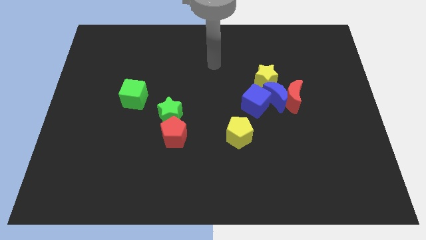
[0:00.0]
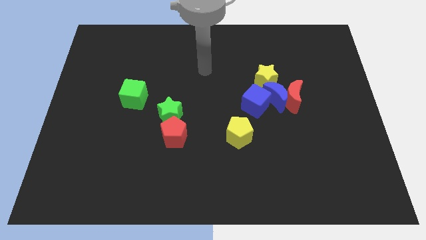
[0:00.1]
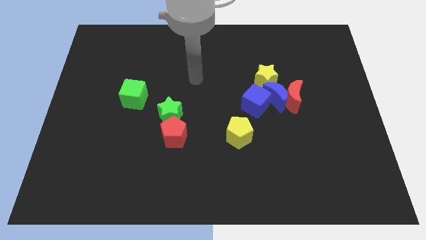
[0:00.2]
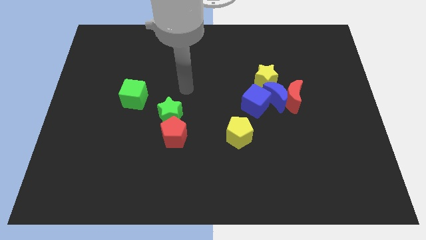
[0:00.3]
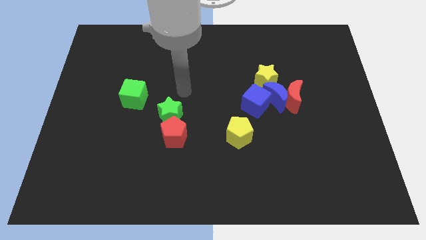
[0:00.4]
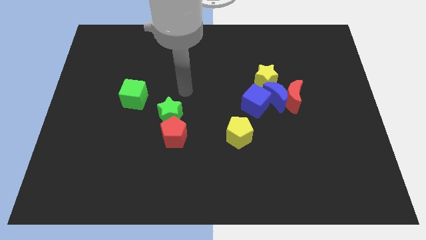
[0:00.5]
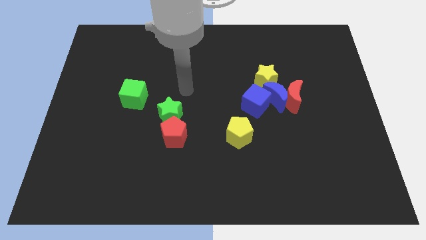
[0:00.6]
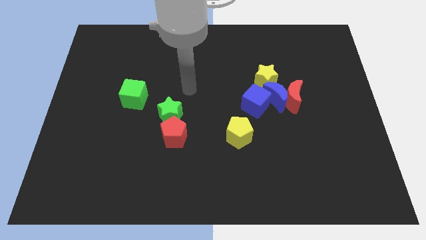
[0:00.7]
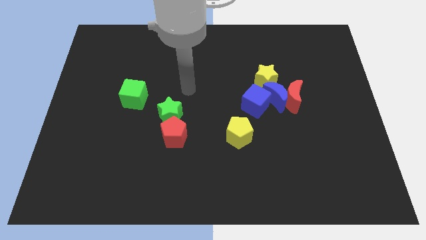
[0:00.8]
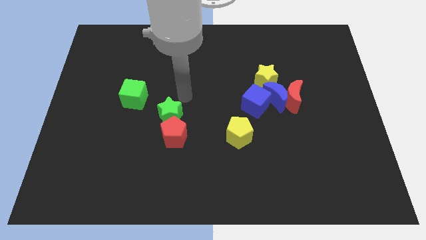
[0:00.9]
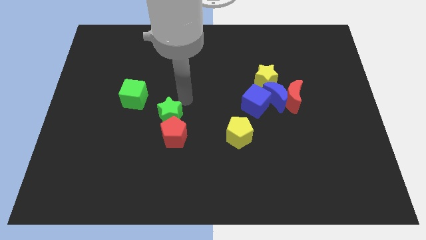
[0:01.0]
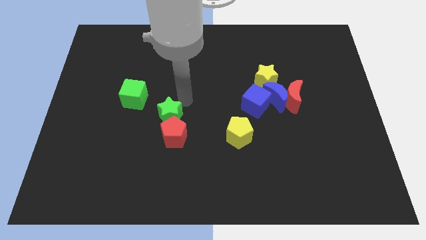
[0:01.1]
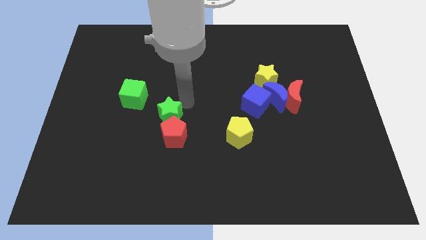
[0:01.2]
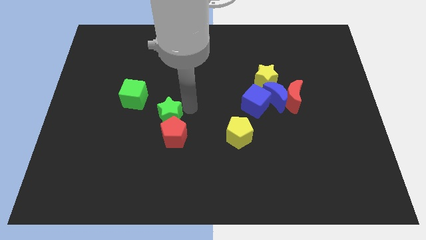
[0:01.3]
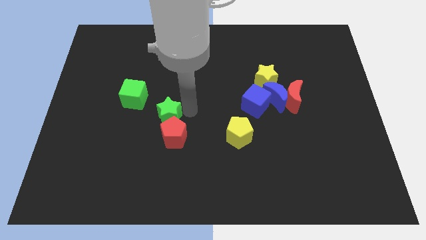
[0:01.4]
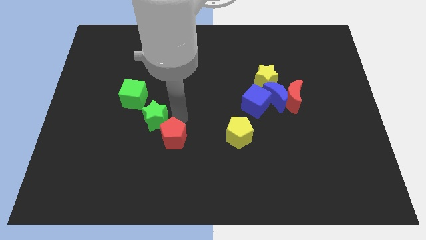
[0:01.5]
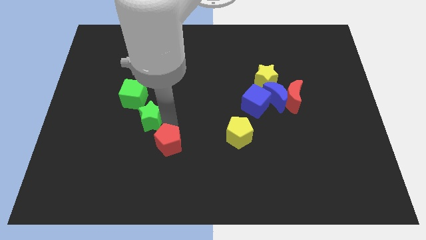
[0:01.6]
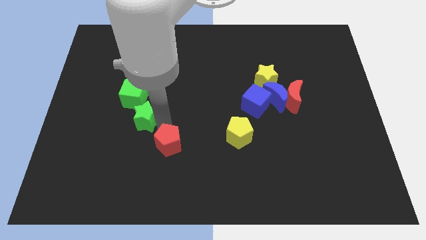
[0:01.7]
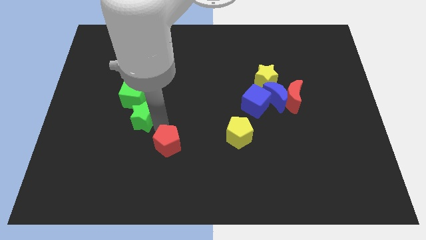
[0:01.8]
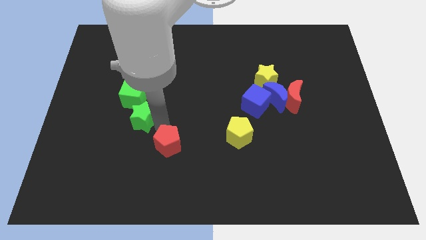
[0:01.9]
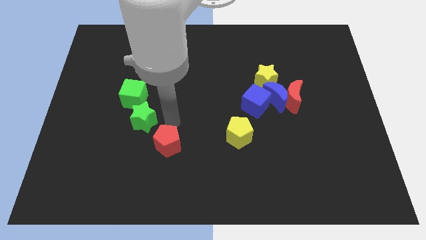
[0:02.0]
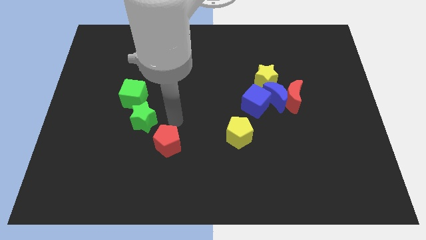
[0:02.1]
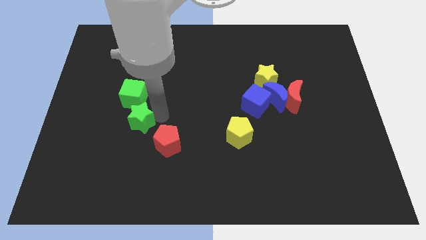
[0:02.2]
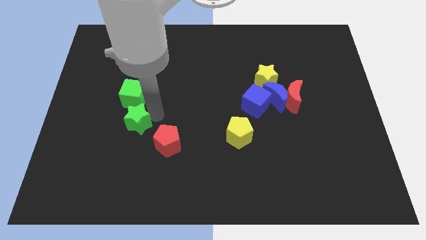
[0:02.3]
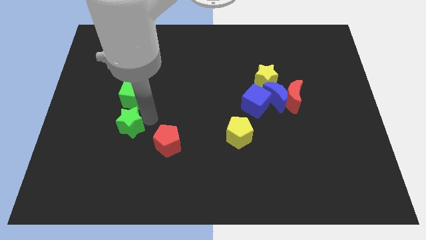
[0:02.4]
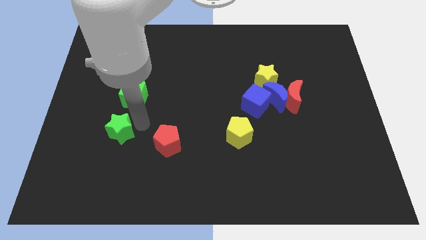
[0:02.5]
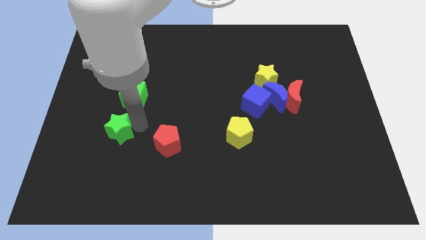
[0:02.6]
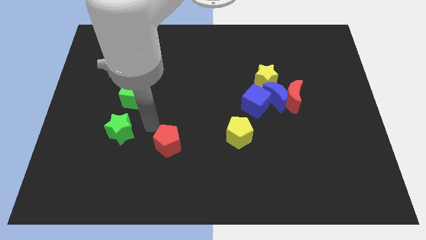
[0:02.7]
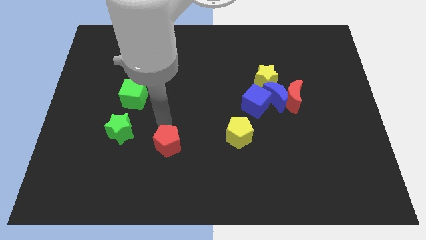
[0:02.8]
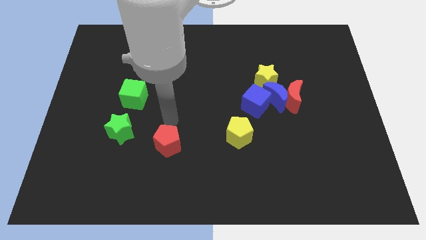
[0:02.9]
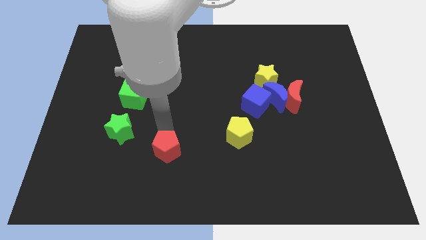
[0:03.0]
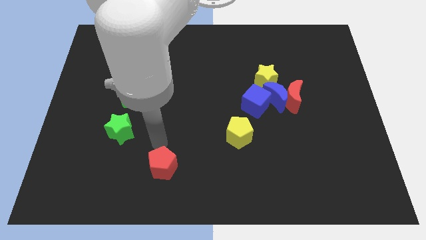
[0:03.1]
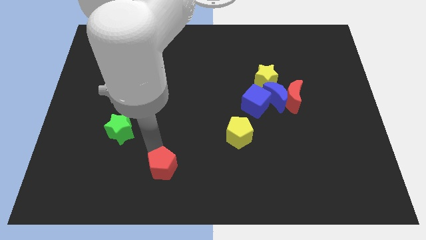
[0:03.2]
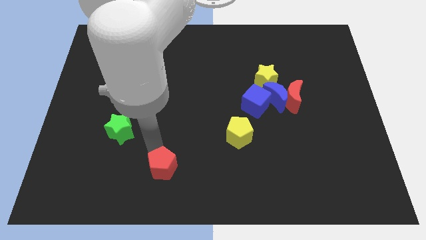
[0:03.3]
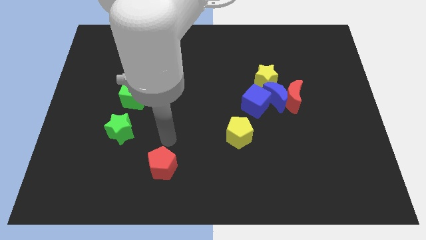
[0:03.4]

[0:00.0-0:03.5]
separate the green star from the red pentagon

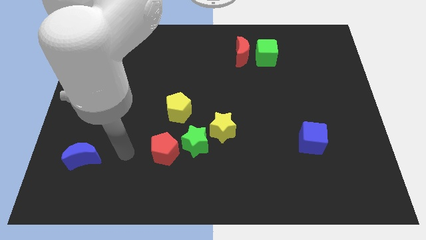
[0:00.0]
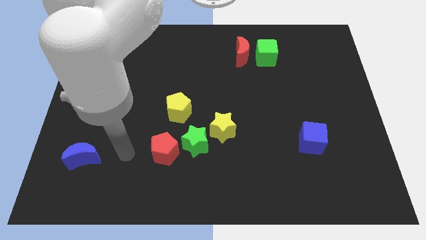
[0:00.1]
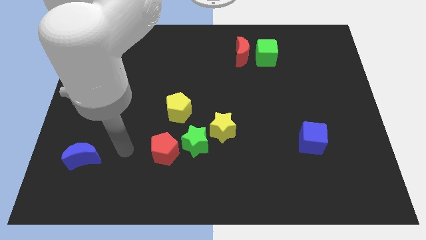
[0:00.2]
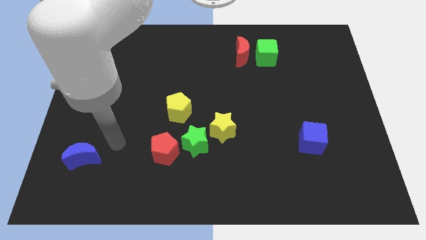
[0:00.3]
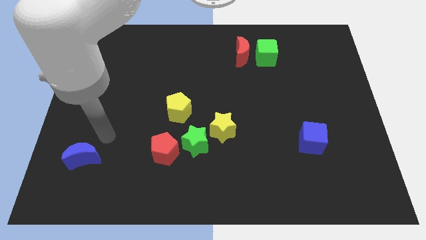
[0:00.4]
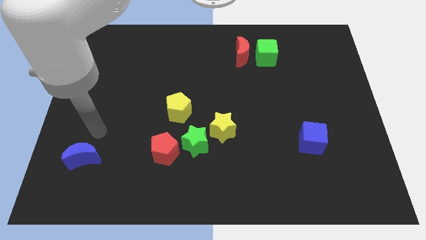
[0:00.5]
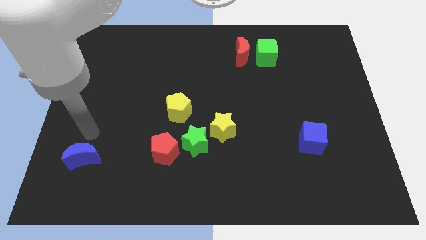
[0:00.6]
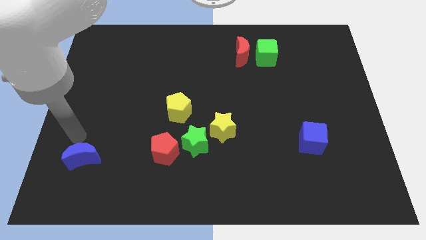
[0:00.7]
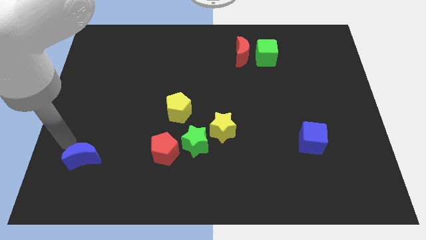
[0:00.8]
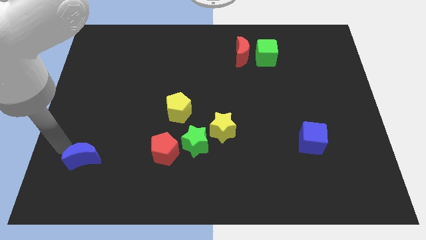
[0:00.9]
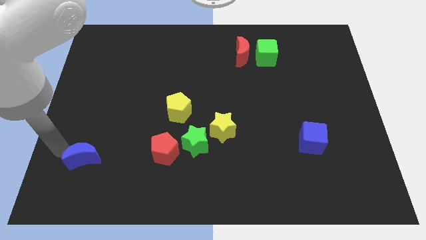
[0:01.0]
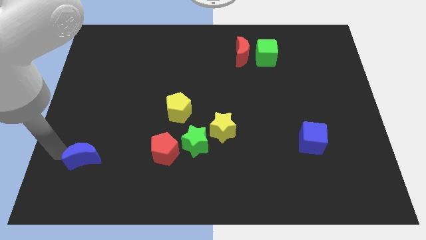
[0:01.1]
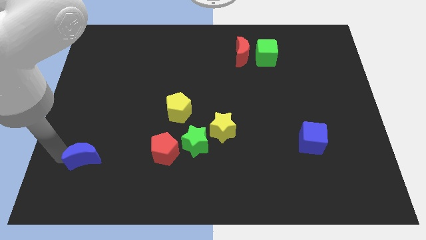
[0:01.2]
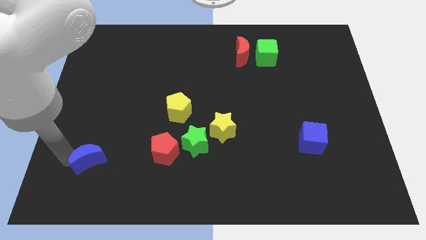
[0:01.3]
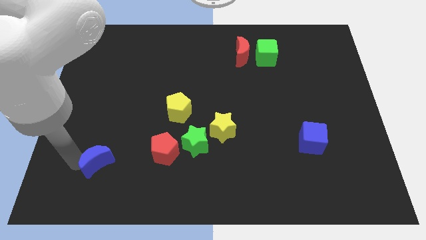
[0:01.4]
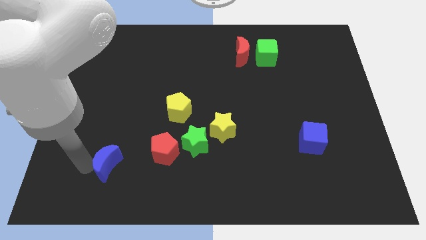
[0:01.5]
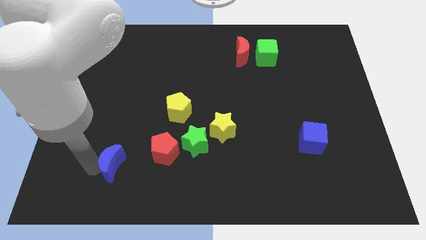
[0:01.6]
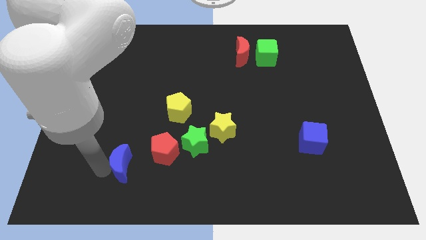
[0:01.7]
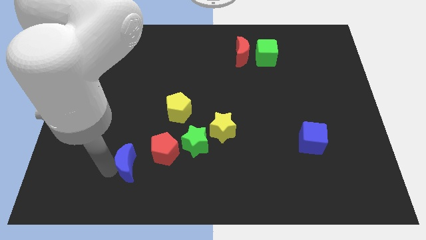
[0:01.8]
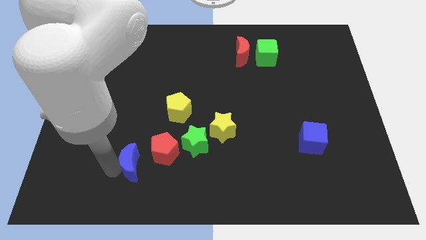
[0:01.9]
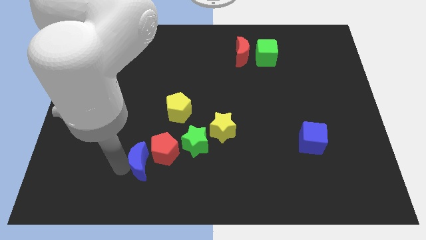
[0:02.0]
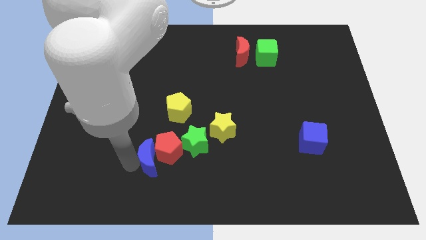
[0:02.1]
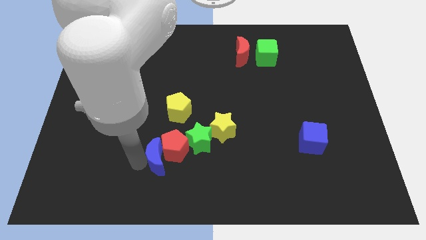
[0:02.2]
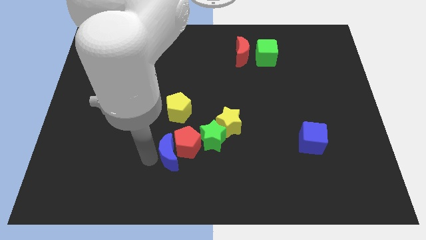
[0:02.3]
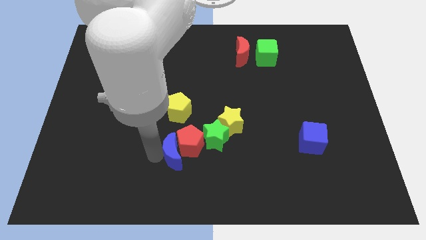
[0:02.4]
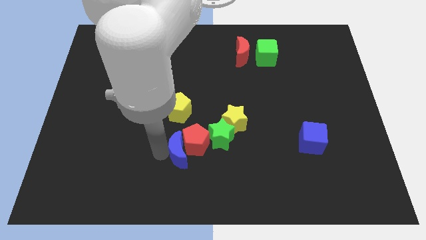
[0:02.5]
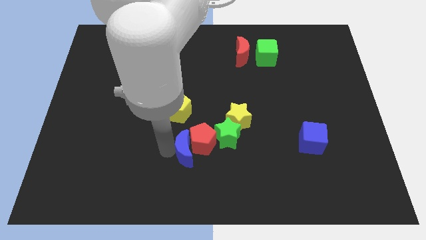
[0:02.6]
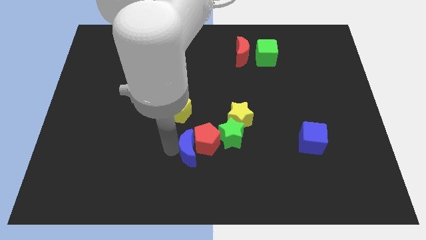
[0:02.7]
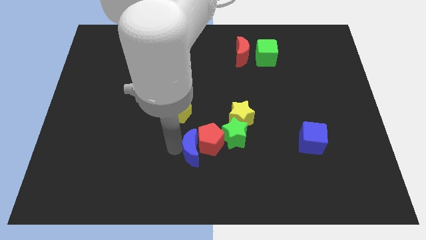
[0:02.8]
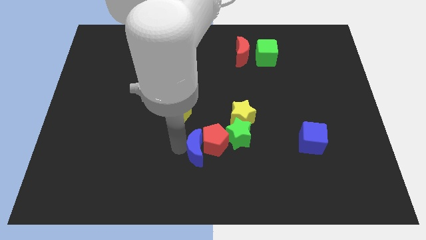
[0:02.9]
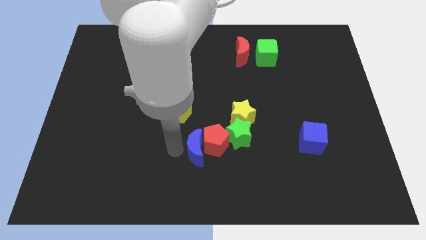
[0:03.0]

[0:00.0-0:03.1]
push blue cube in to red pentagon

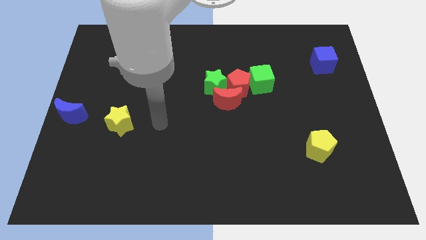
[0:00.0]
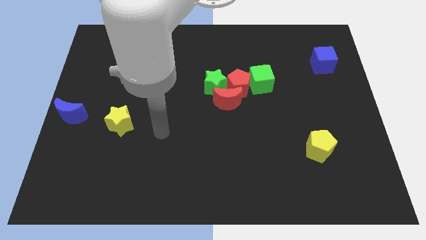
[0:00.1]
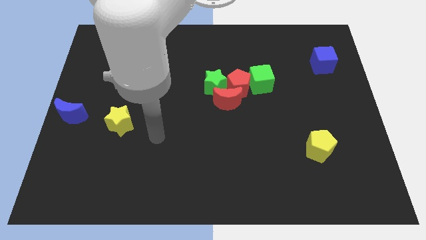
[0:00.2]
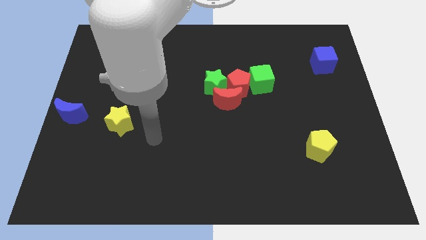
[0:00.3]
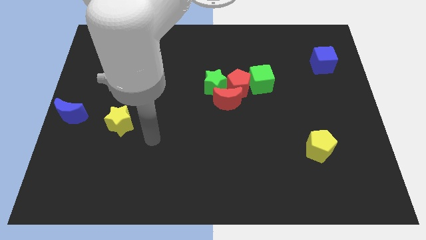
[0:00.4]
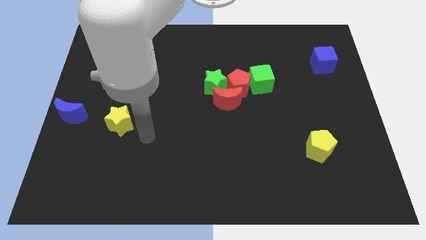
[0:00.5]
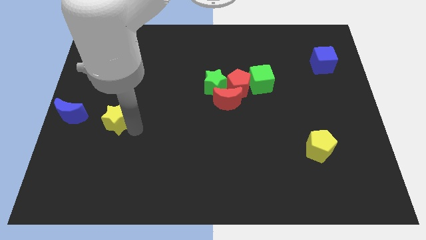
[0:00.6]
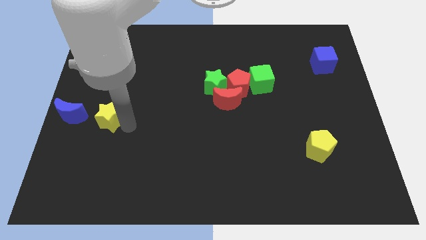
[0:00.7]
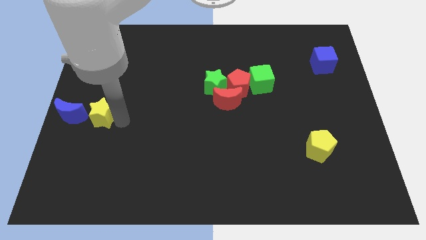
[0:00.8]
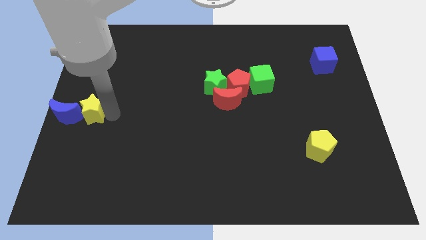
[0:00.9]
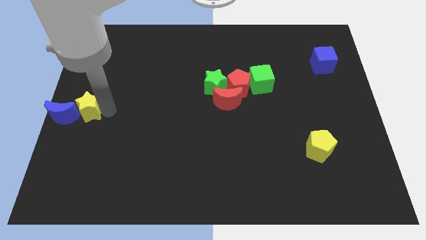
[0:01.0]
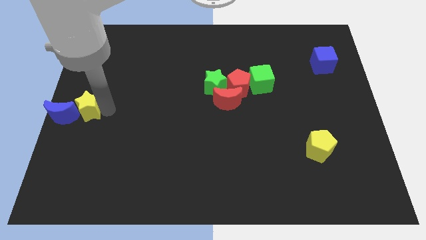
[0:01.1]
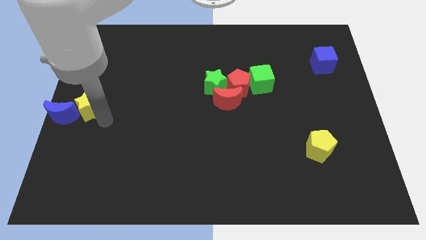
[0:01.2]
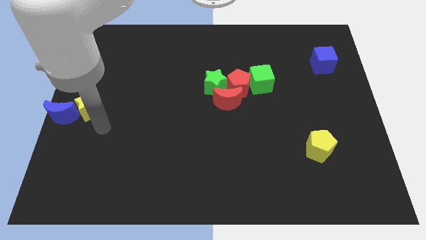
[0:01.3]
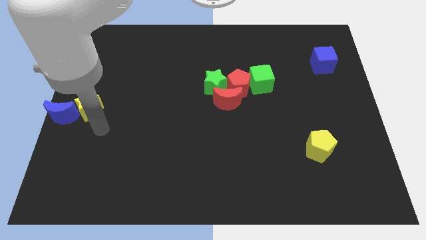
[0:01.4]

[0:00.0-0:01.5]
put the yellow star into the blue moon

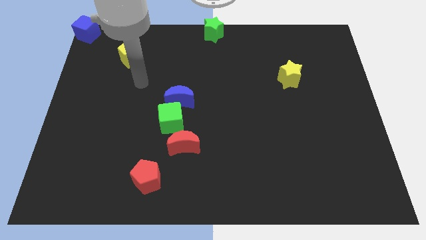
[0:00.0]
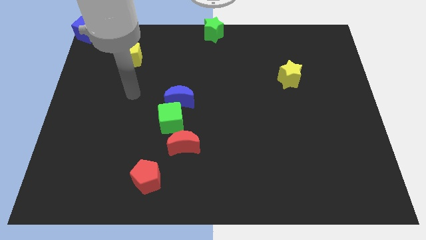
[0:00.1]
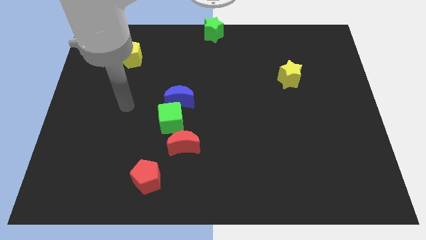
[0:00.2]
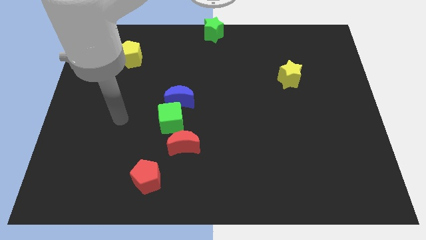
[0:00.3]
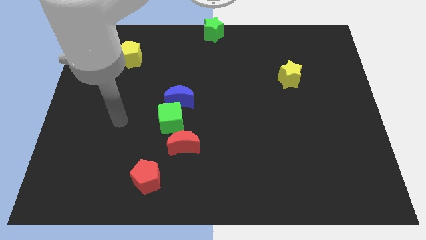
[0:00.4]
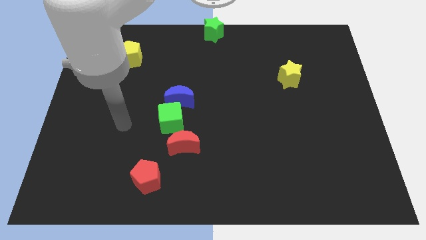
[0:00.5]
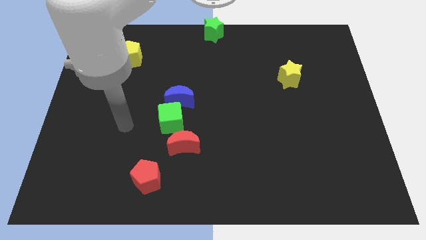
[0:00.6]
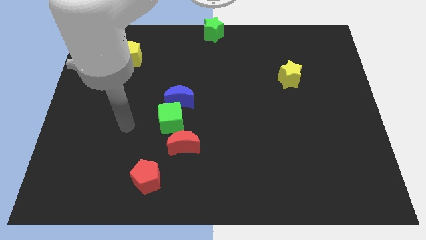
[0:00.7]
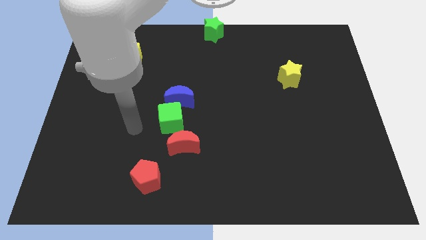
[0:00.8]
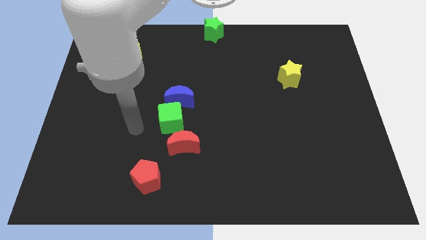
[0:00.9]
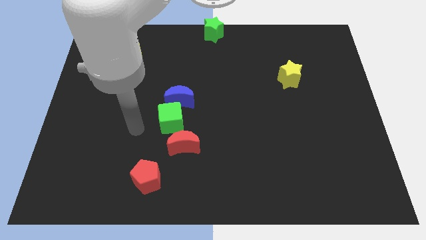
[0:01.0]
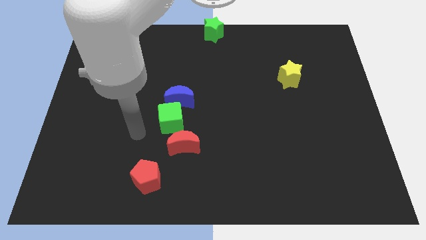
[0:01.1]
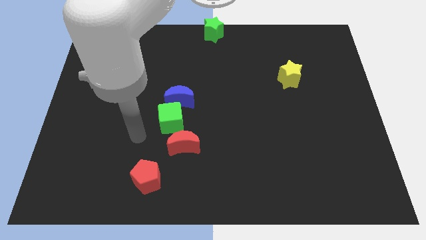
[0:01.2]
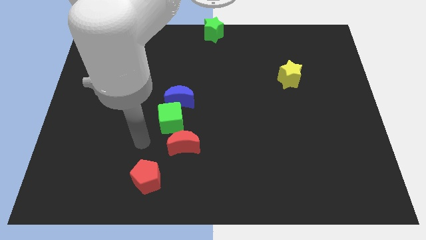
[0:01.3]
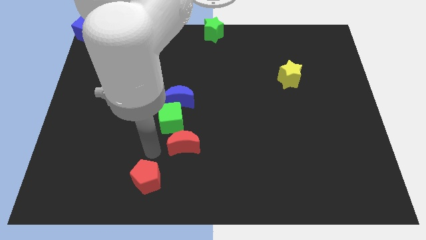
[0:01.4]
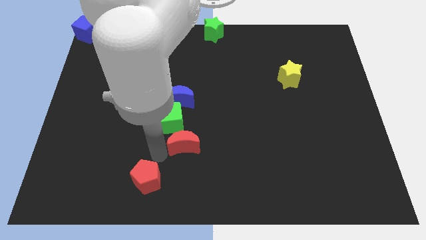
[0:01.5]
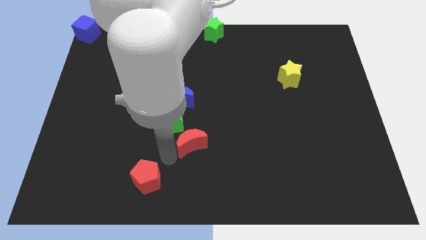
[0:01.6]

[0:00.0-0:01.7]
tap the red crescent
